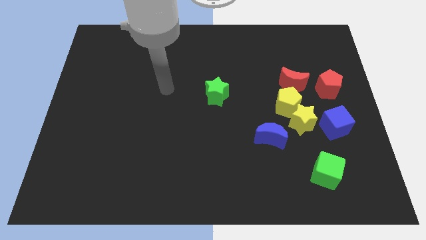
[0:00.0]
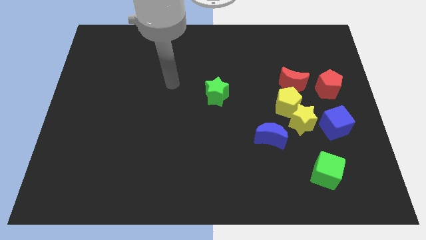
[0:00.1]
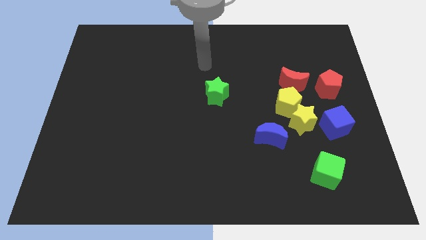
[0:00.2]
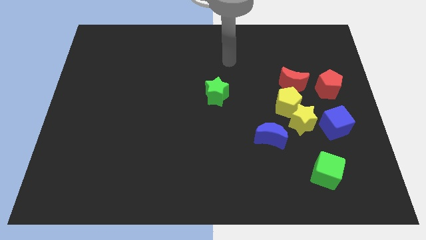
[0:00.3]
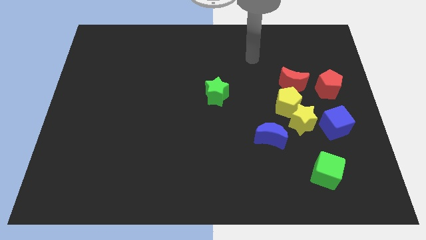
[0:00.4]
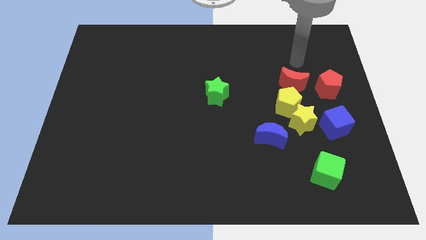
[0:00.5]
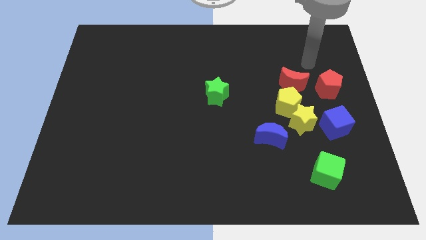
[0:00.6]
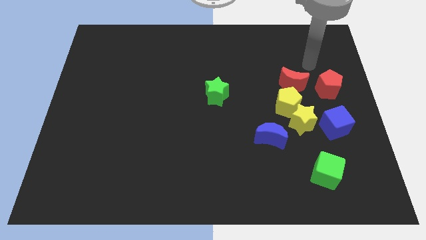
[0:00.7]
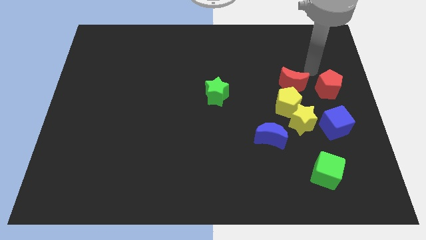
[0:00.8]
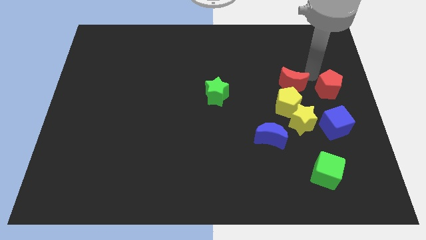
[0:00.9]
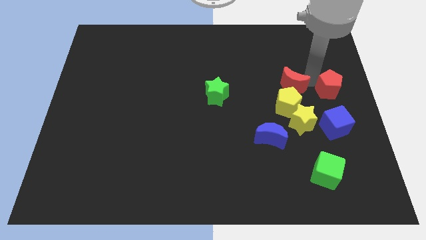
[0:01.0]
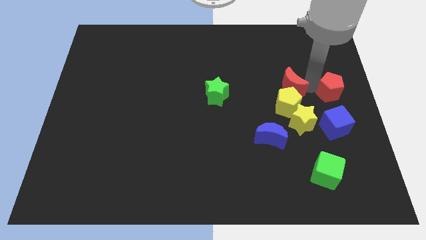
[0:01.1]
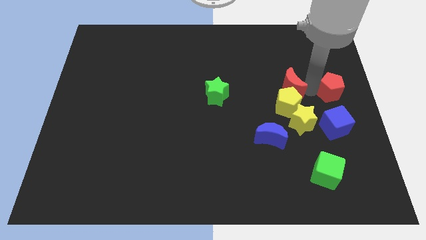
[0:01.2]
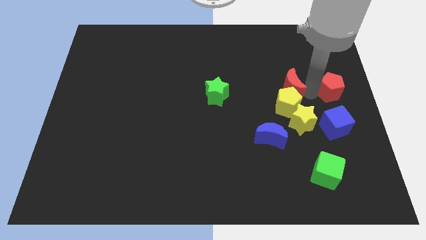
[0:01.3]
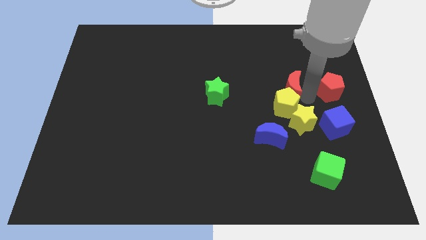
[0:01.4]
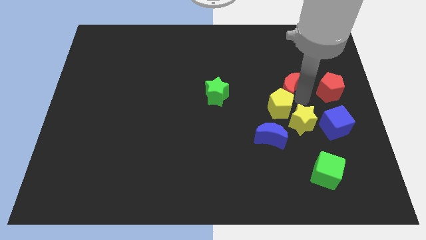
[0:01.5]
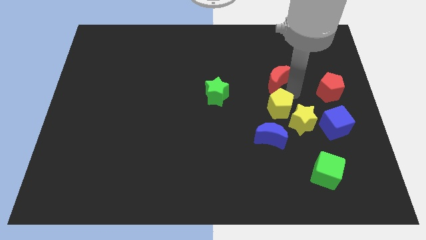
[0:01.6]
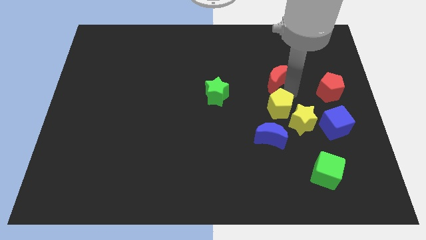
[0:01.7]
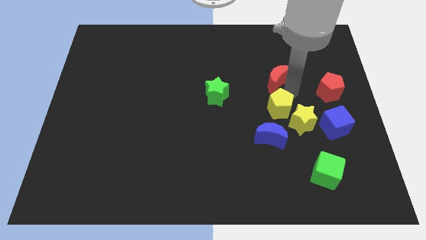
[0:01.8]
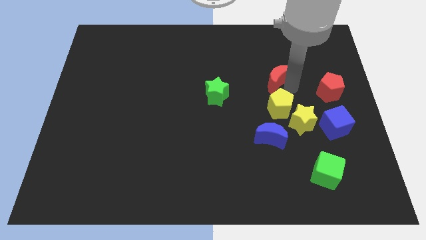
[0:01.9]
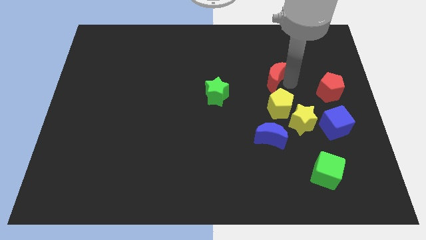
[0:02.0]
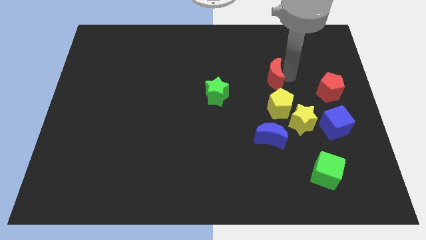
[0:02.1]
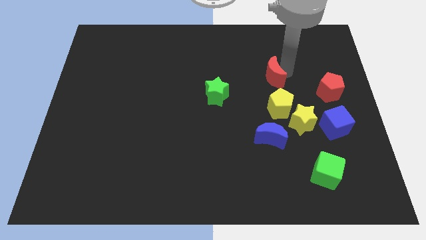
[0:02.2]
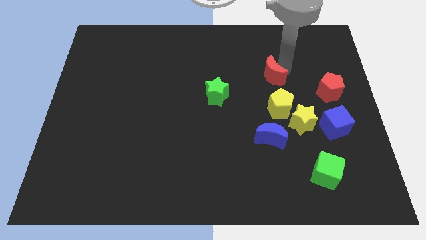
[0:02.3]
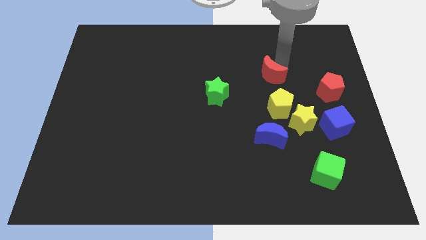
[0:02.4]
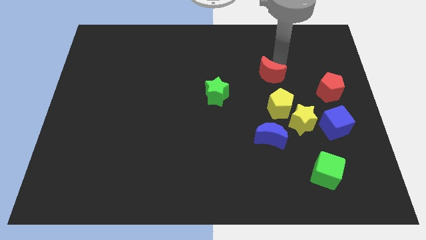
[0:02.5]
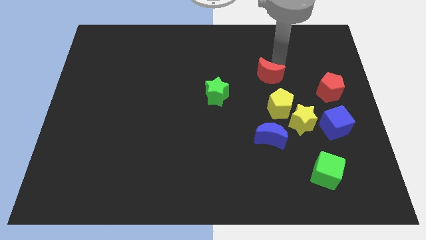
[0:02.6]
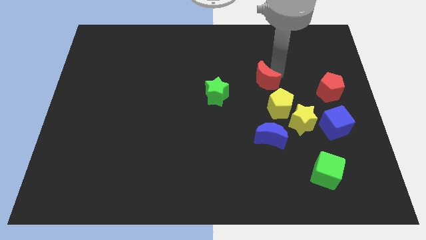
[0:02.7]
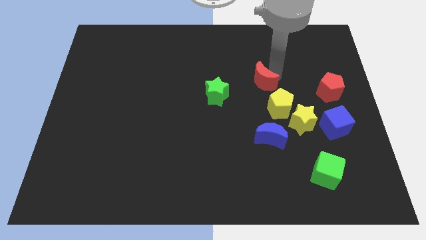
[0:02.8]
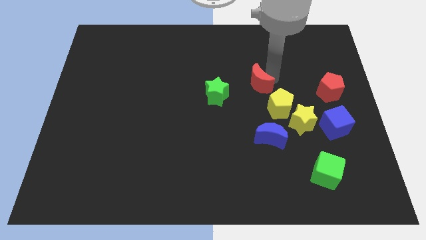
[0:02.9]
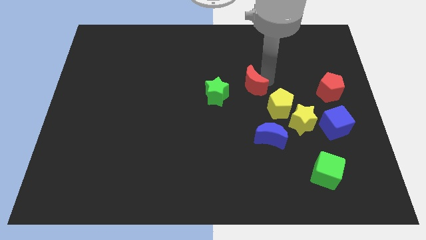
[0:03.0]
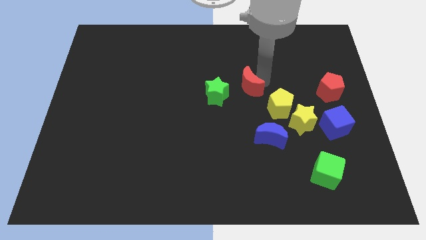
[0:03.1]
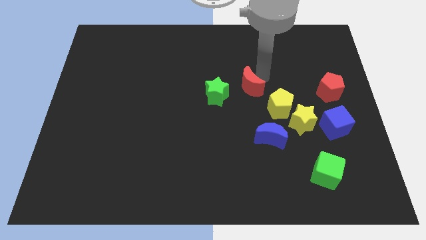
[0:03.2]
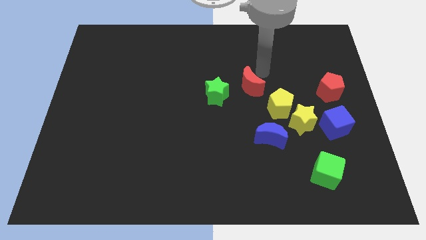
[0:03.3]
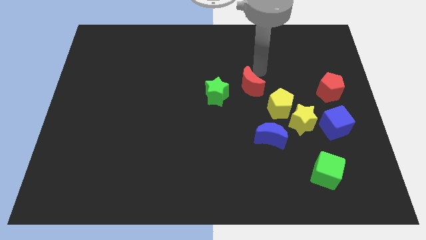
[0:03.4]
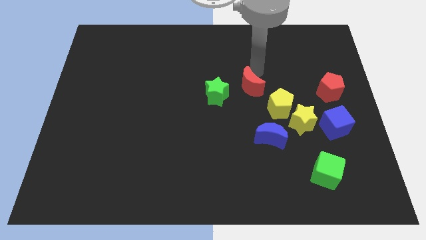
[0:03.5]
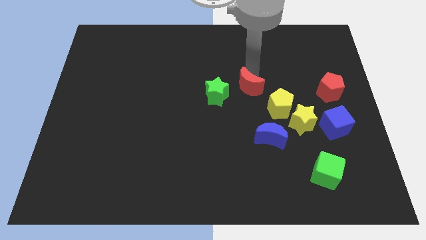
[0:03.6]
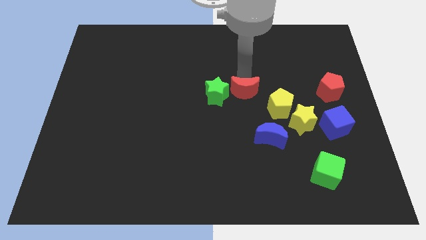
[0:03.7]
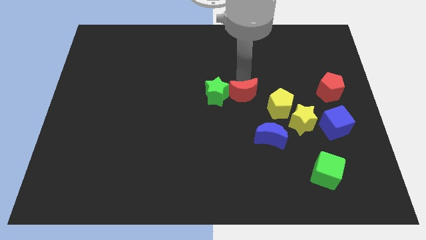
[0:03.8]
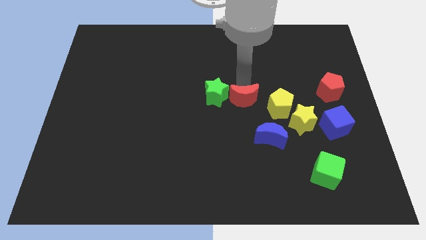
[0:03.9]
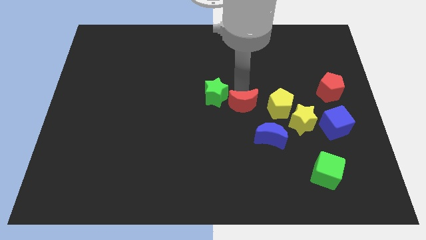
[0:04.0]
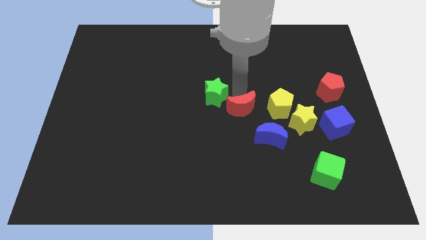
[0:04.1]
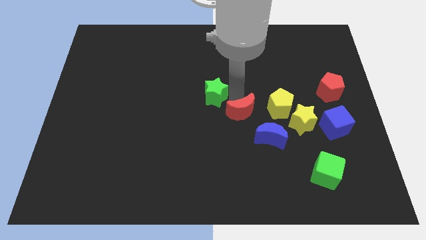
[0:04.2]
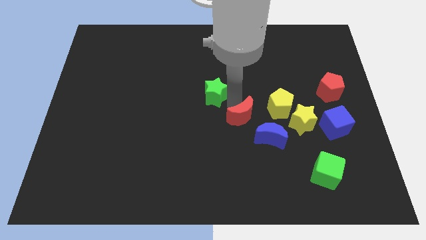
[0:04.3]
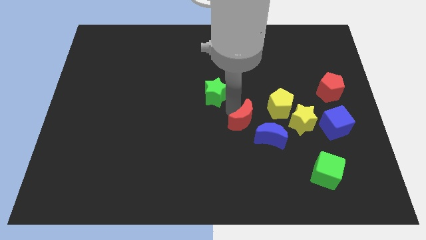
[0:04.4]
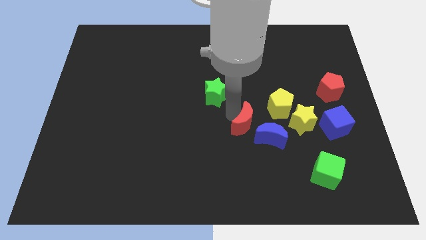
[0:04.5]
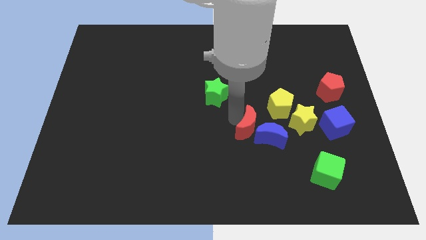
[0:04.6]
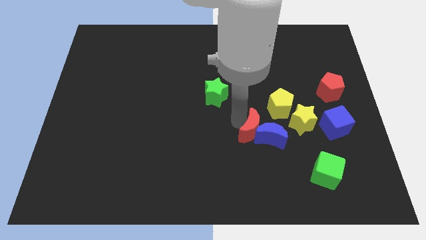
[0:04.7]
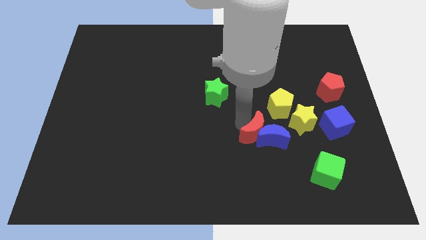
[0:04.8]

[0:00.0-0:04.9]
push the red moon close to the blue moon

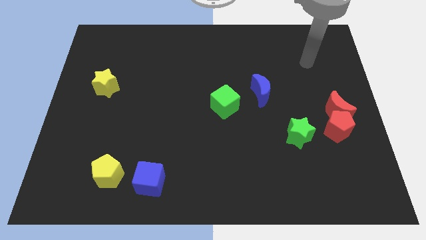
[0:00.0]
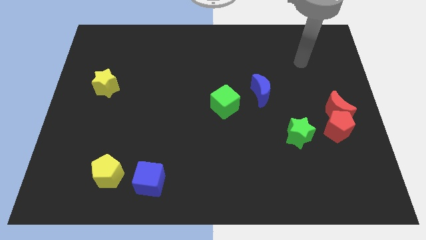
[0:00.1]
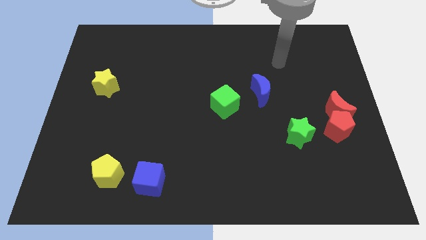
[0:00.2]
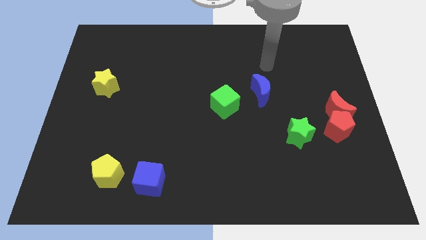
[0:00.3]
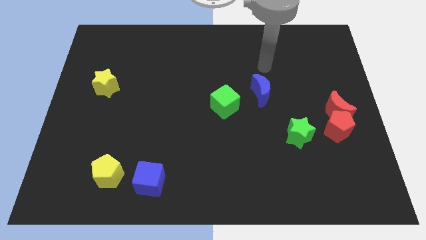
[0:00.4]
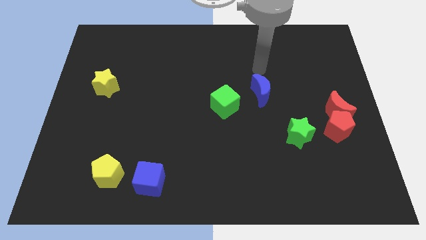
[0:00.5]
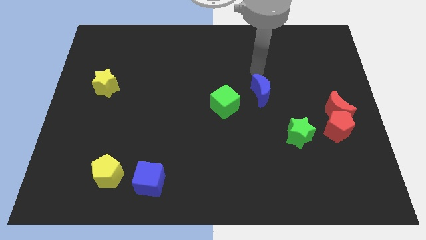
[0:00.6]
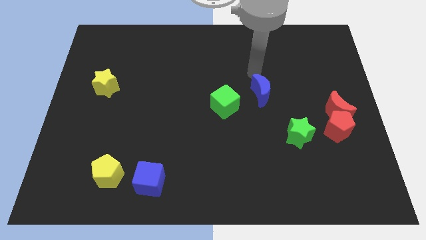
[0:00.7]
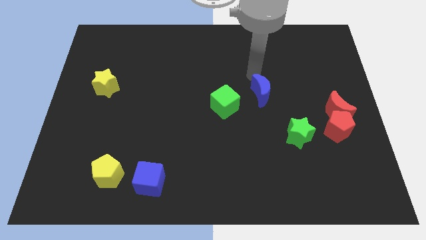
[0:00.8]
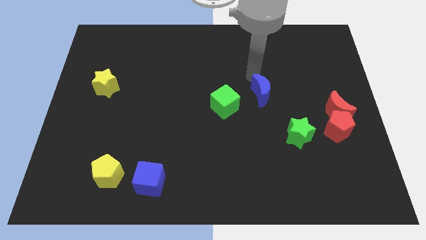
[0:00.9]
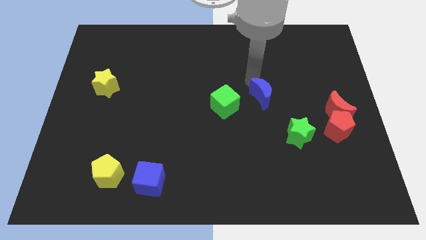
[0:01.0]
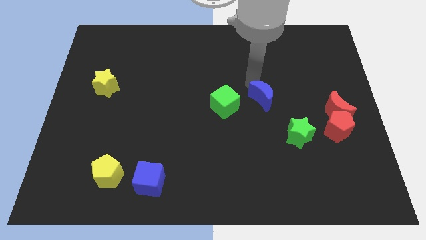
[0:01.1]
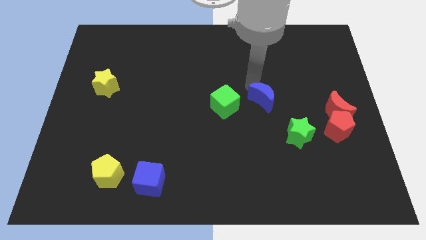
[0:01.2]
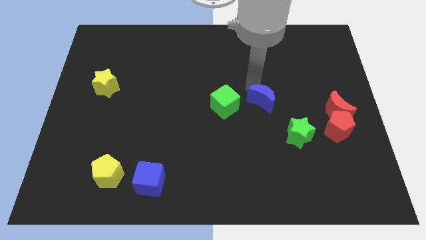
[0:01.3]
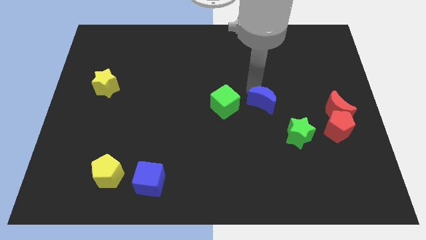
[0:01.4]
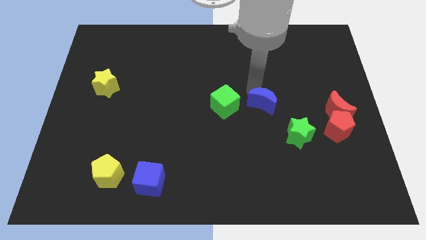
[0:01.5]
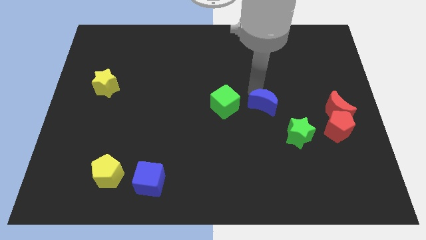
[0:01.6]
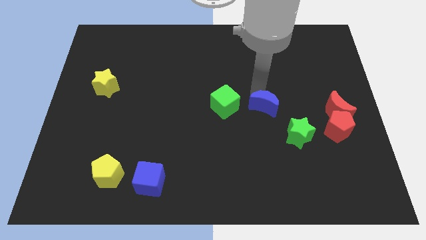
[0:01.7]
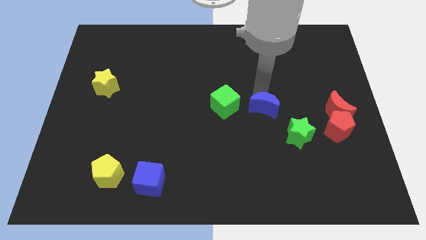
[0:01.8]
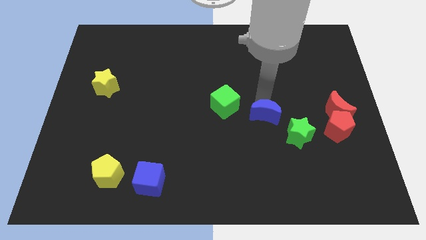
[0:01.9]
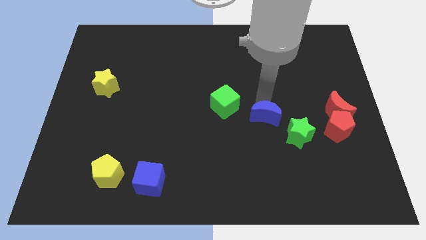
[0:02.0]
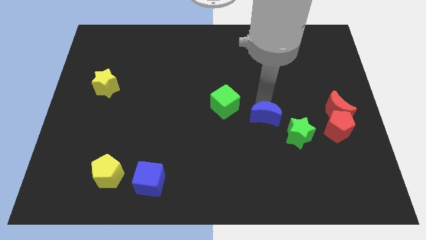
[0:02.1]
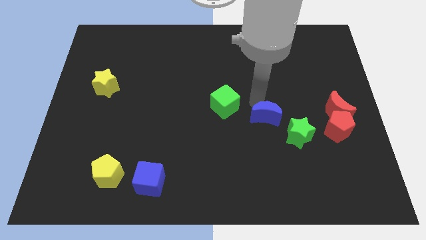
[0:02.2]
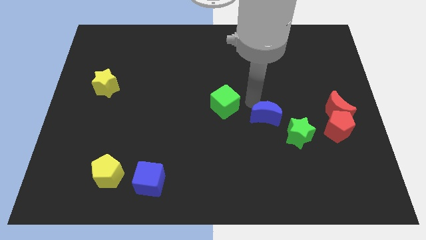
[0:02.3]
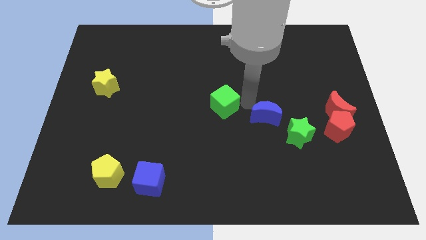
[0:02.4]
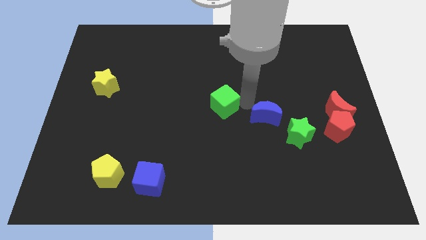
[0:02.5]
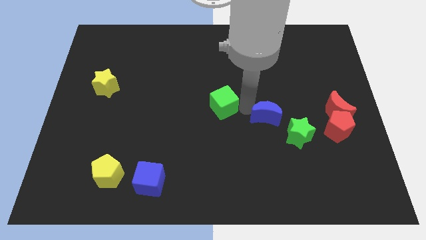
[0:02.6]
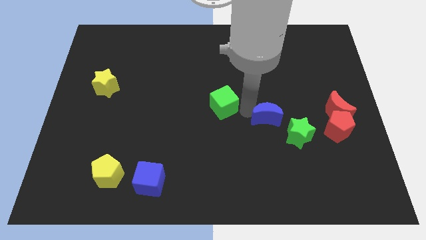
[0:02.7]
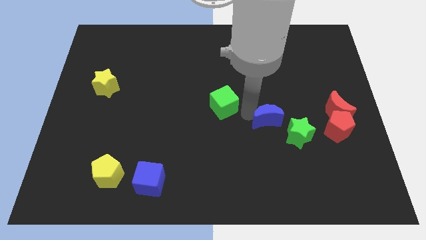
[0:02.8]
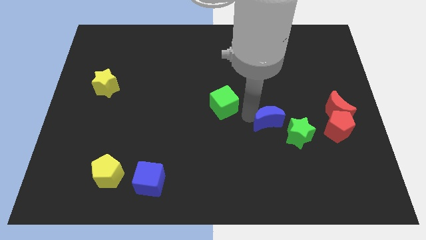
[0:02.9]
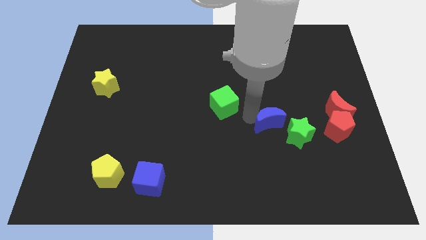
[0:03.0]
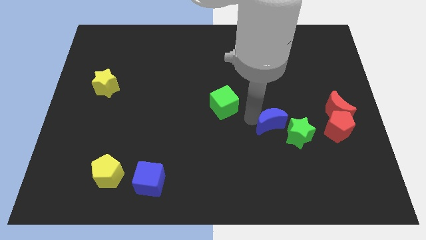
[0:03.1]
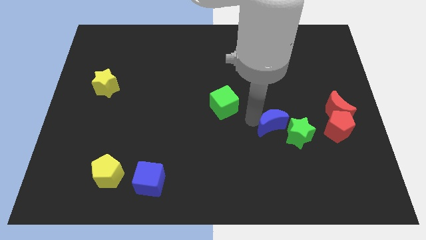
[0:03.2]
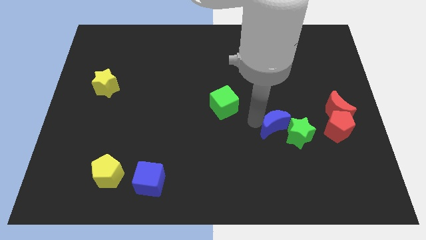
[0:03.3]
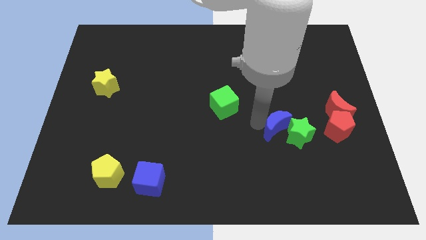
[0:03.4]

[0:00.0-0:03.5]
push the blue moon to the green star

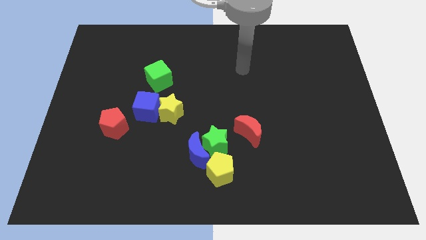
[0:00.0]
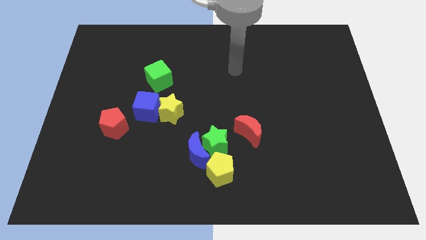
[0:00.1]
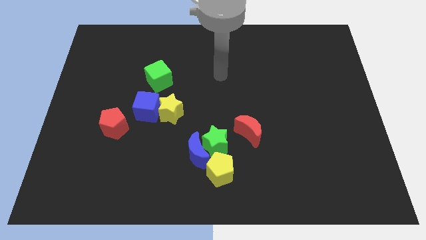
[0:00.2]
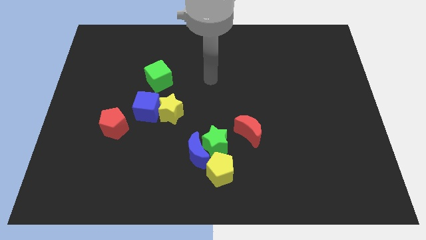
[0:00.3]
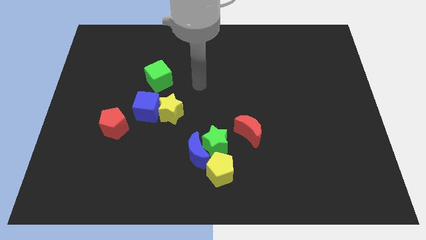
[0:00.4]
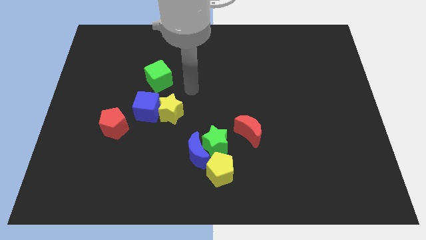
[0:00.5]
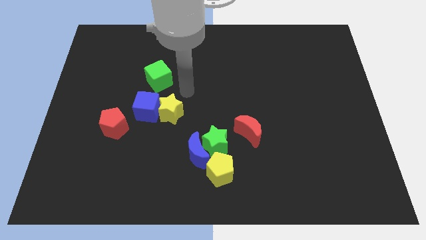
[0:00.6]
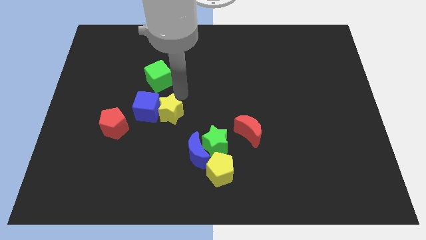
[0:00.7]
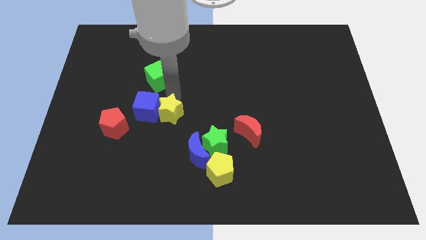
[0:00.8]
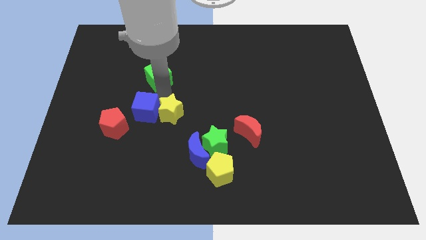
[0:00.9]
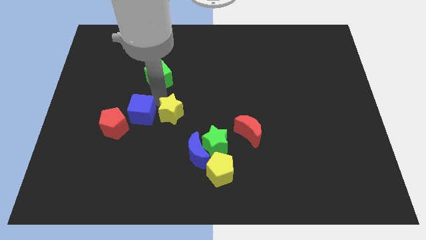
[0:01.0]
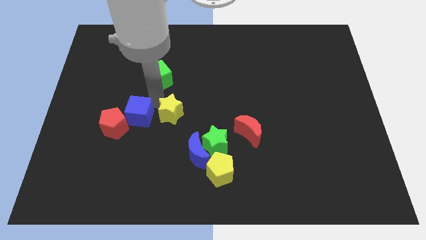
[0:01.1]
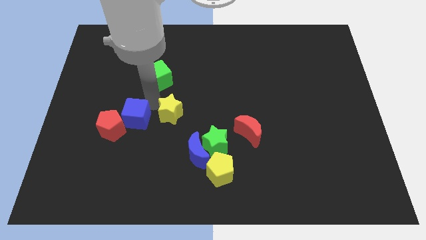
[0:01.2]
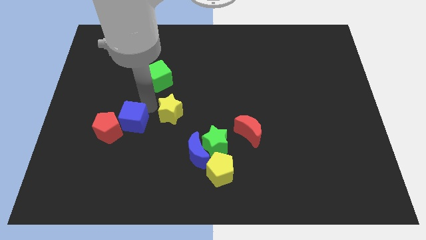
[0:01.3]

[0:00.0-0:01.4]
move the blue cube to the red pentagon
